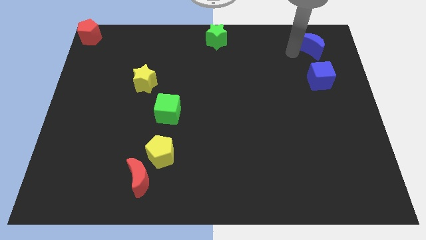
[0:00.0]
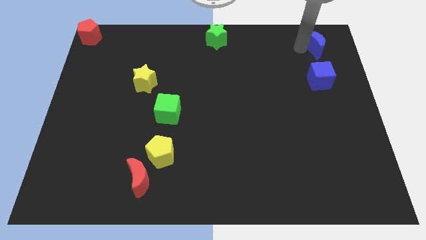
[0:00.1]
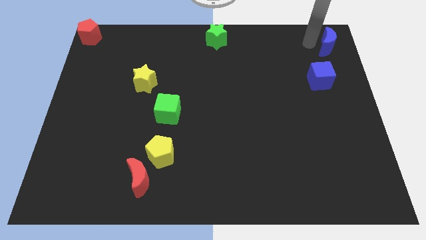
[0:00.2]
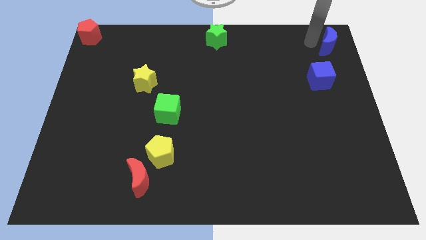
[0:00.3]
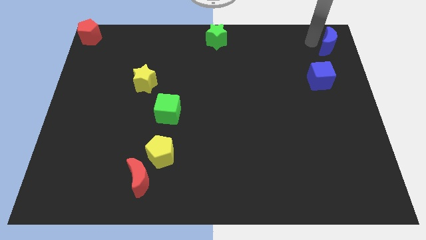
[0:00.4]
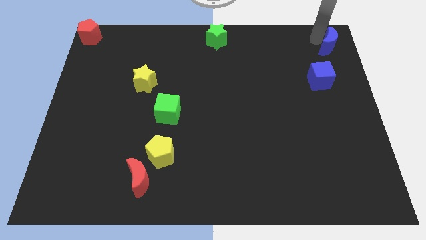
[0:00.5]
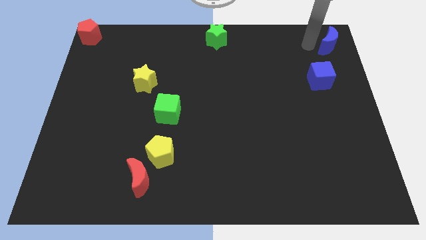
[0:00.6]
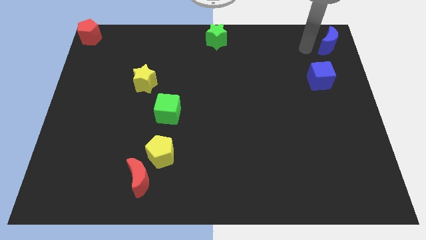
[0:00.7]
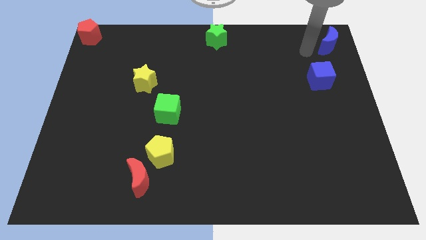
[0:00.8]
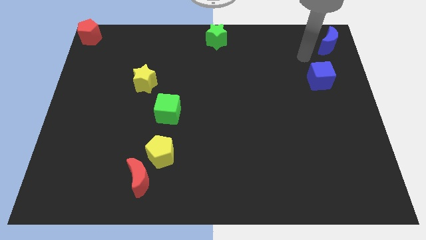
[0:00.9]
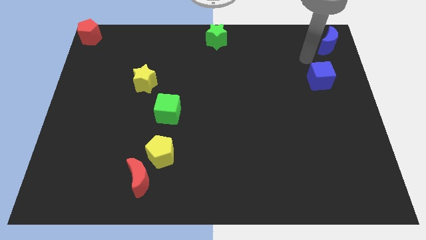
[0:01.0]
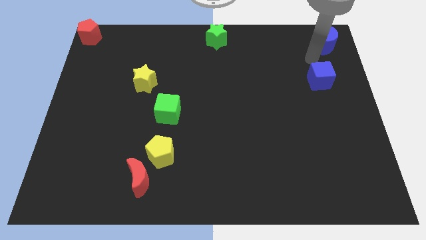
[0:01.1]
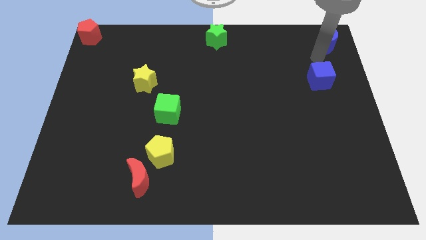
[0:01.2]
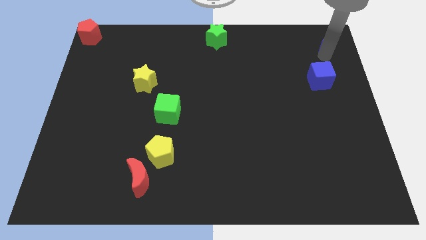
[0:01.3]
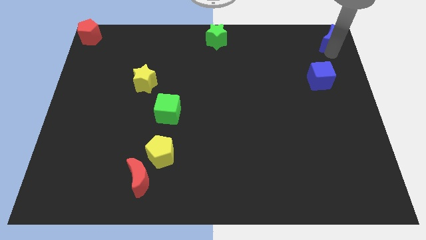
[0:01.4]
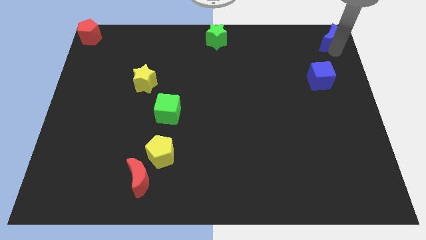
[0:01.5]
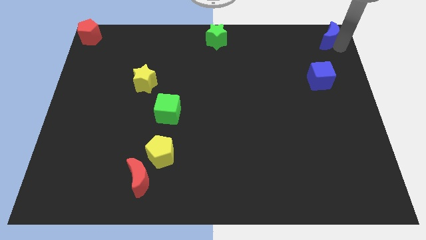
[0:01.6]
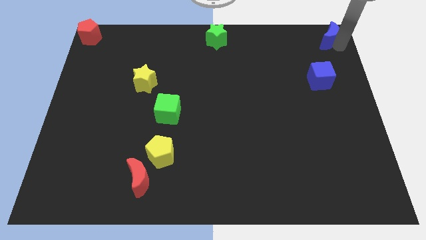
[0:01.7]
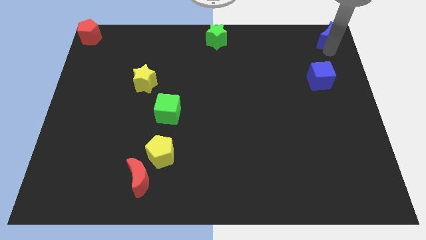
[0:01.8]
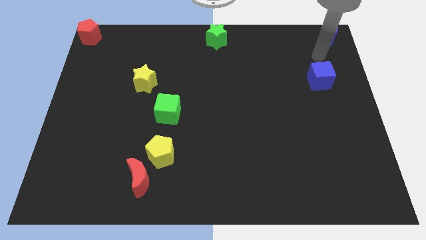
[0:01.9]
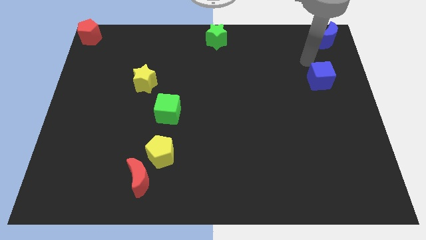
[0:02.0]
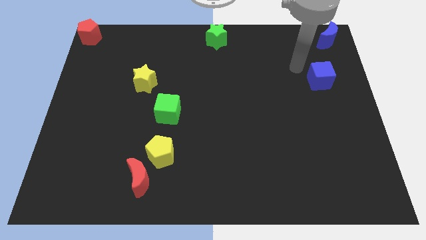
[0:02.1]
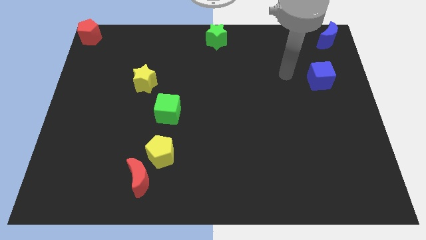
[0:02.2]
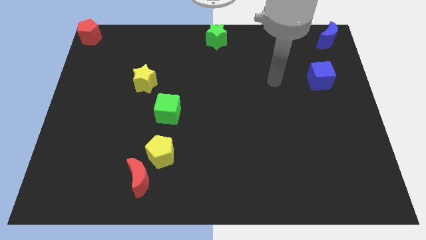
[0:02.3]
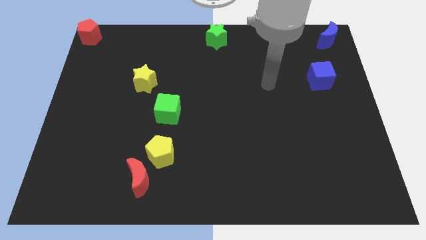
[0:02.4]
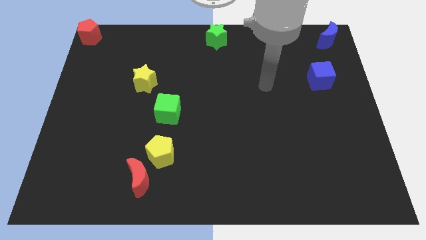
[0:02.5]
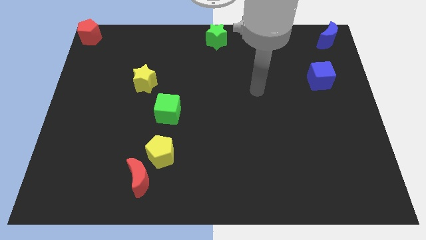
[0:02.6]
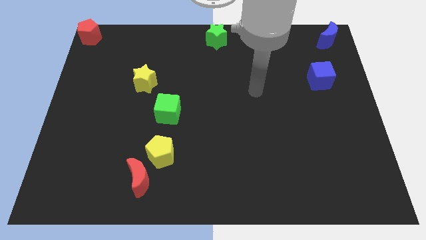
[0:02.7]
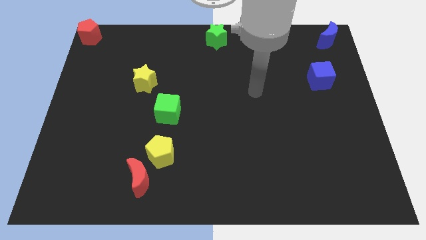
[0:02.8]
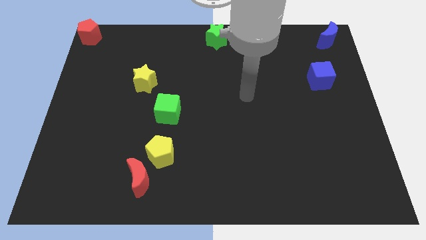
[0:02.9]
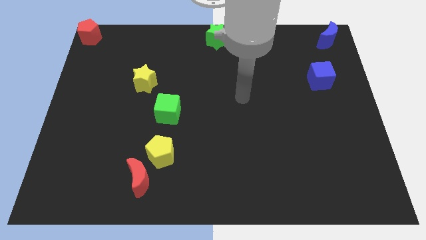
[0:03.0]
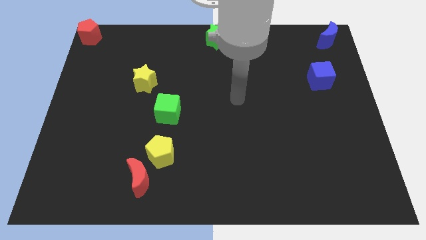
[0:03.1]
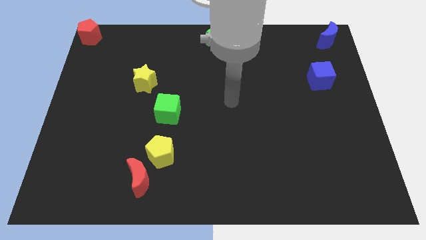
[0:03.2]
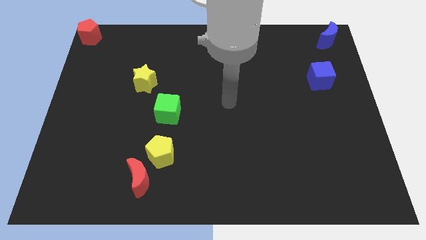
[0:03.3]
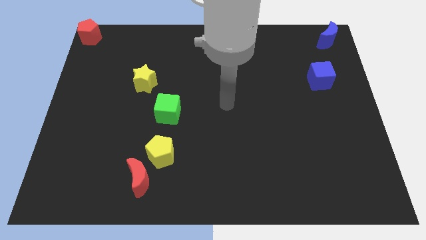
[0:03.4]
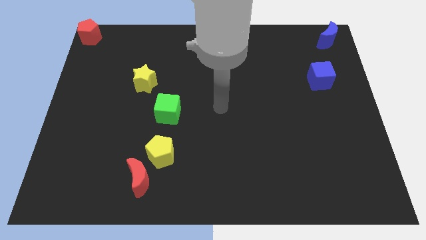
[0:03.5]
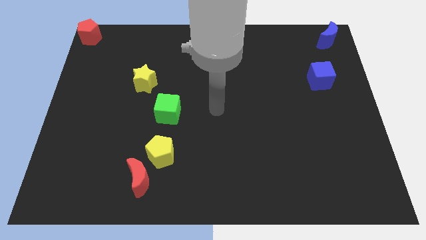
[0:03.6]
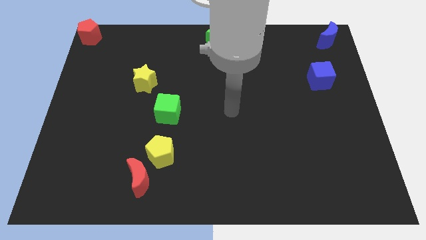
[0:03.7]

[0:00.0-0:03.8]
move the arm away from the blue moon

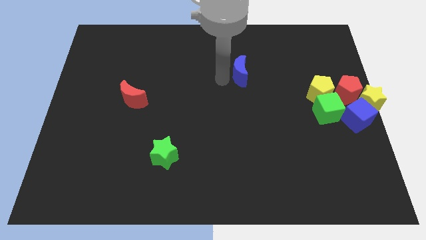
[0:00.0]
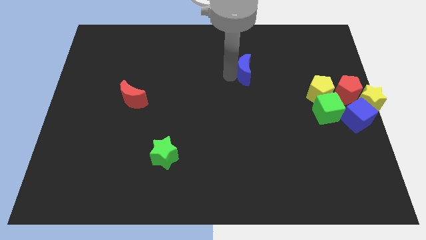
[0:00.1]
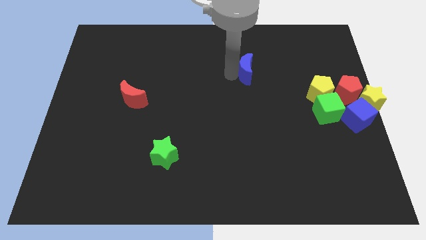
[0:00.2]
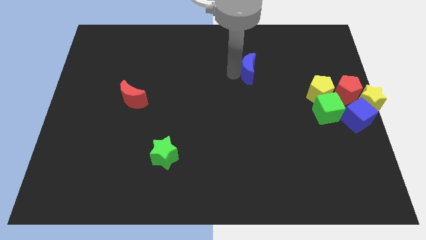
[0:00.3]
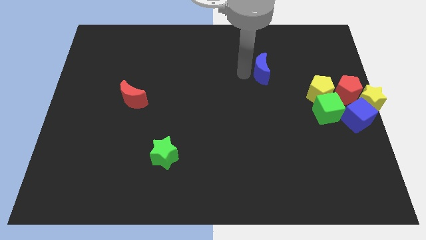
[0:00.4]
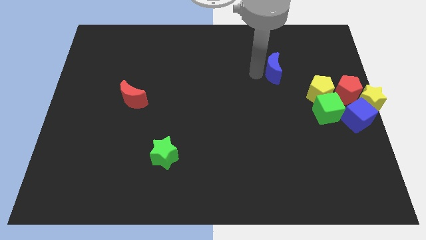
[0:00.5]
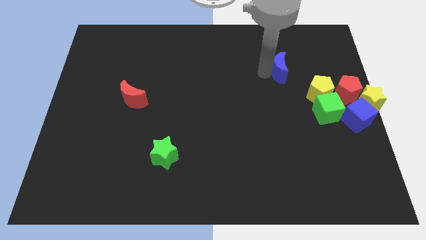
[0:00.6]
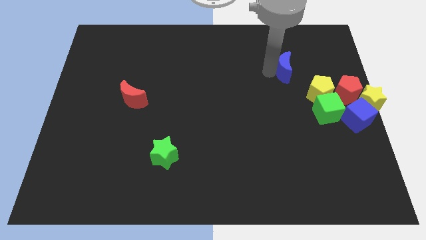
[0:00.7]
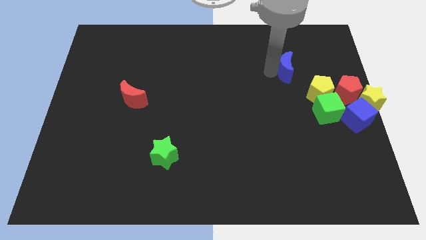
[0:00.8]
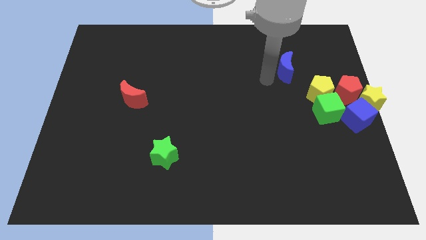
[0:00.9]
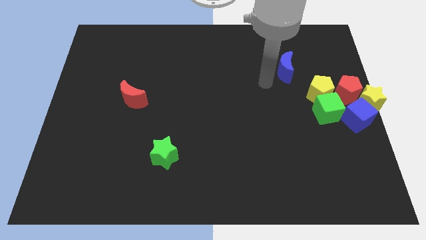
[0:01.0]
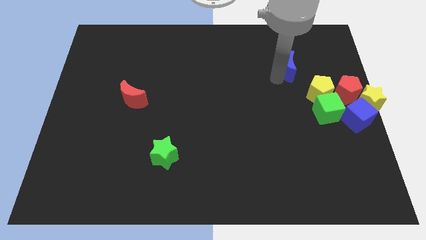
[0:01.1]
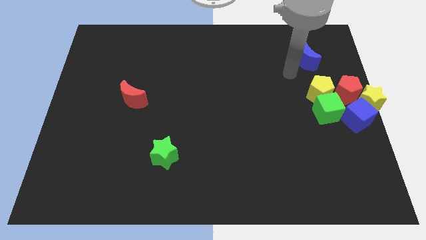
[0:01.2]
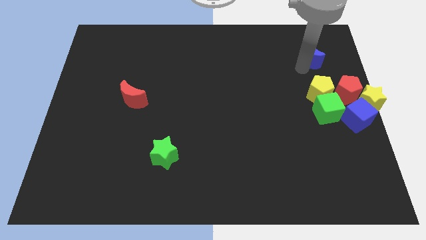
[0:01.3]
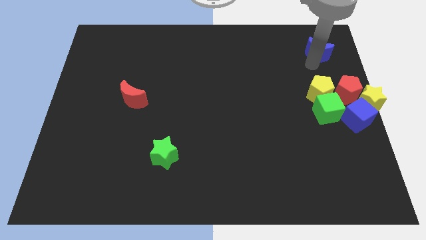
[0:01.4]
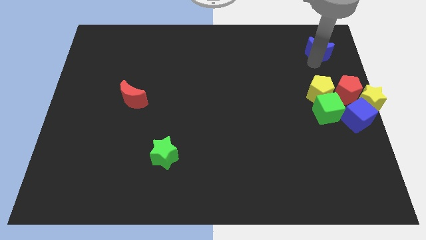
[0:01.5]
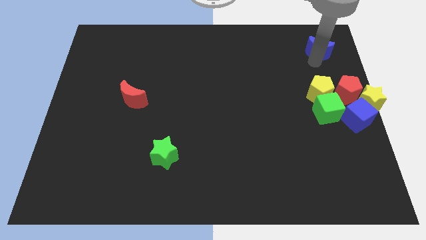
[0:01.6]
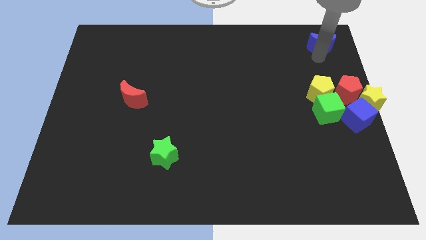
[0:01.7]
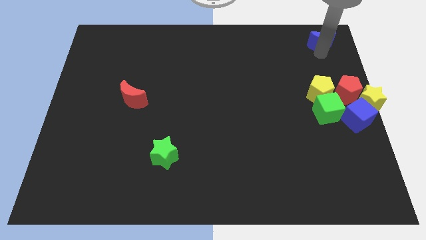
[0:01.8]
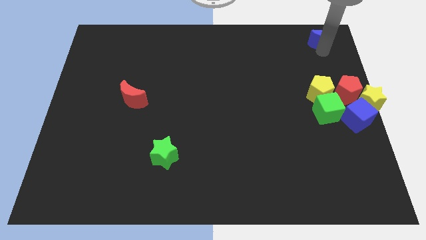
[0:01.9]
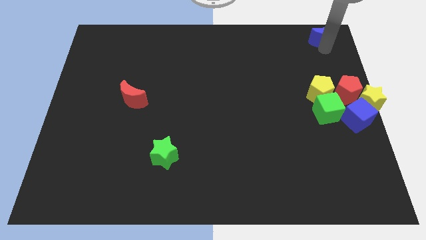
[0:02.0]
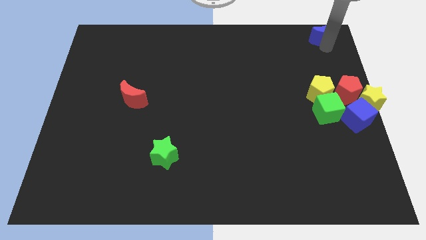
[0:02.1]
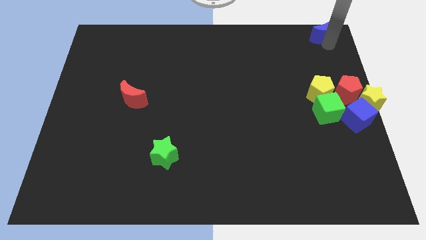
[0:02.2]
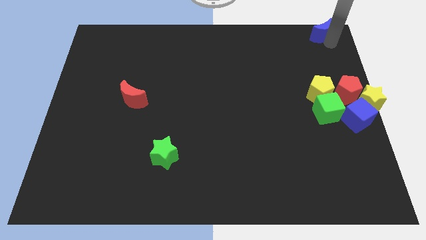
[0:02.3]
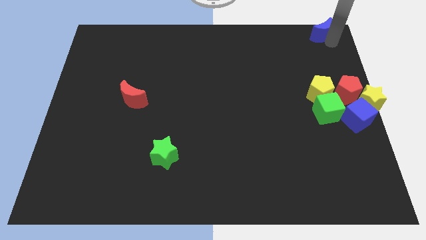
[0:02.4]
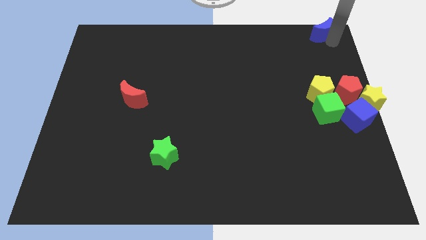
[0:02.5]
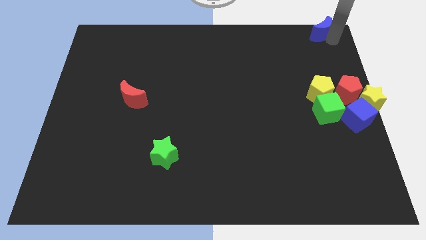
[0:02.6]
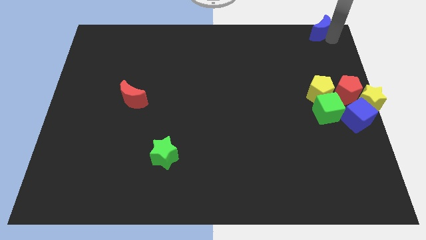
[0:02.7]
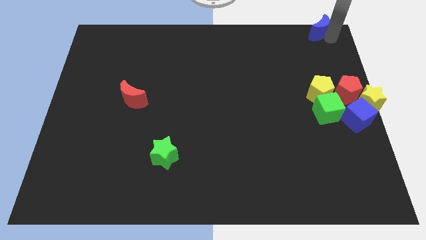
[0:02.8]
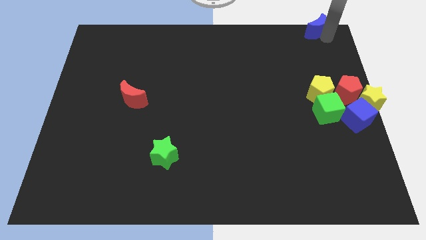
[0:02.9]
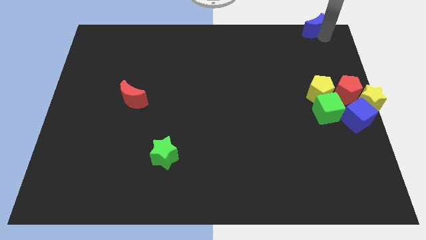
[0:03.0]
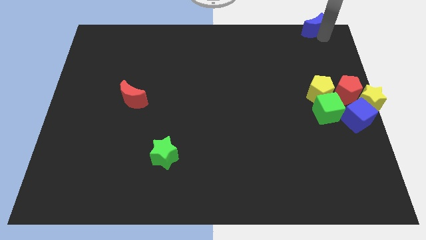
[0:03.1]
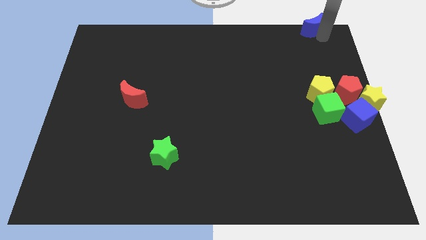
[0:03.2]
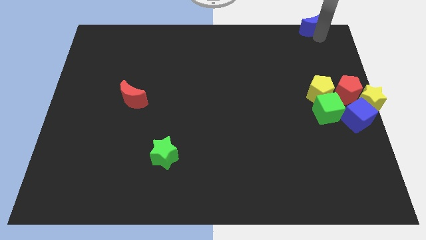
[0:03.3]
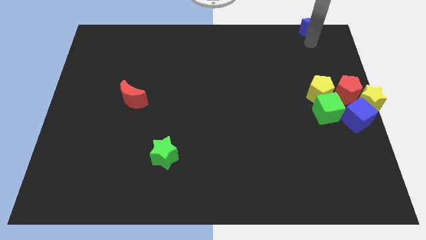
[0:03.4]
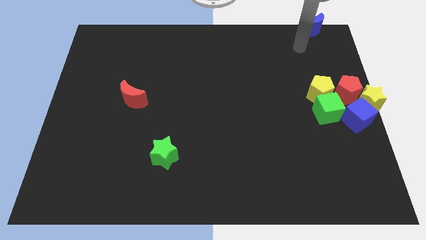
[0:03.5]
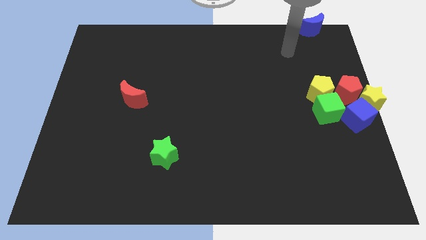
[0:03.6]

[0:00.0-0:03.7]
push the blue crescent towards the top right side of the board

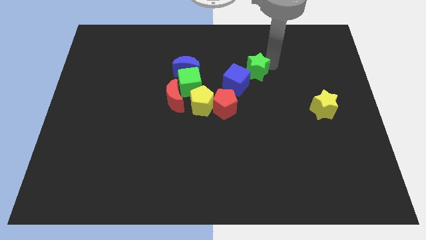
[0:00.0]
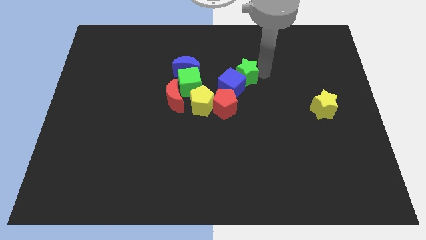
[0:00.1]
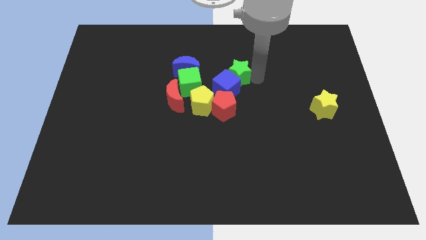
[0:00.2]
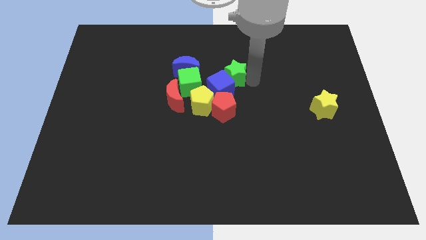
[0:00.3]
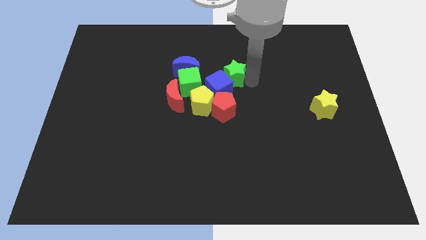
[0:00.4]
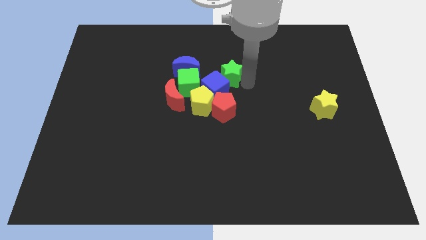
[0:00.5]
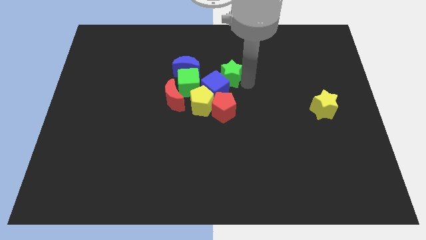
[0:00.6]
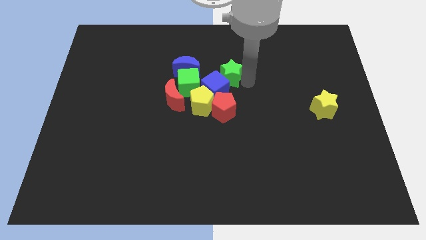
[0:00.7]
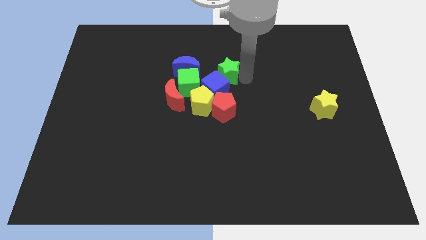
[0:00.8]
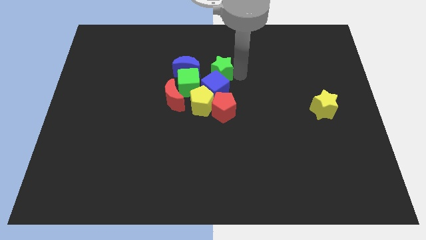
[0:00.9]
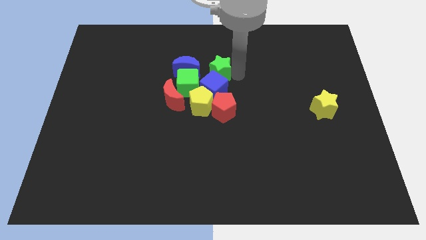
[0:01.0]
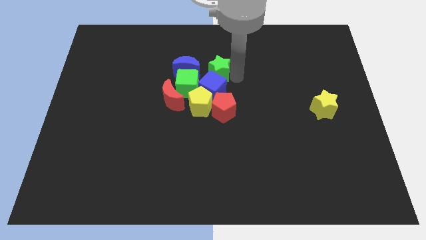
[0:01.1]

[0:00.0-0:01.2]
push the green star into the blue cube

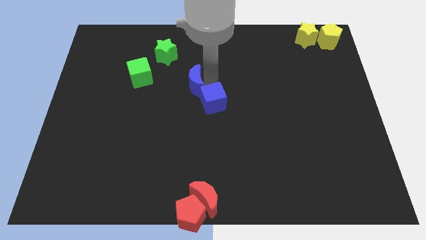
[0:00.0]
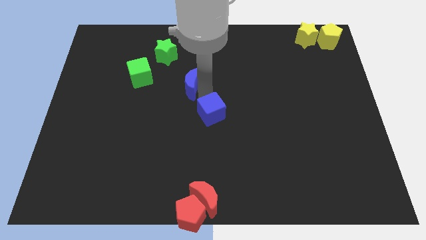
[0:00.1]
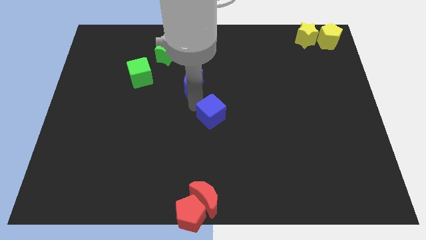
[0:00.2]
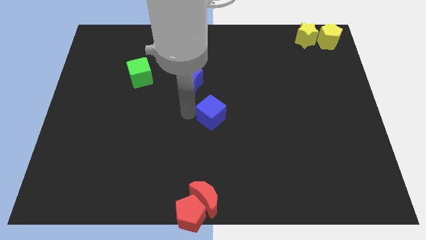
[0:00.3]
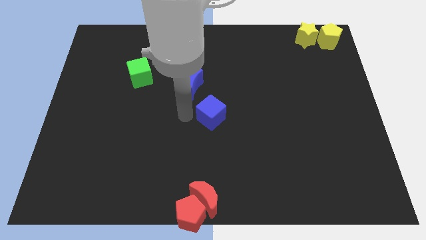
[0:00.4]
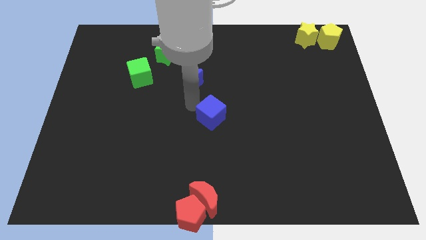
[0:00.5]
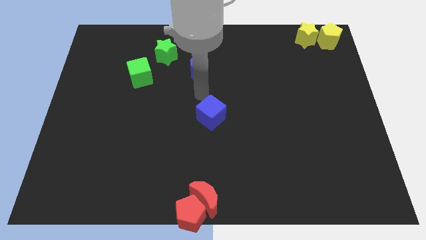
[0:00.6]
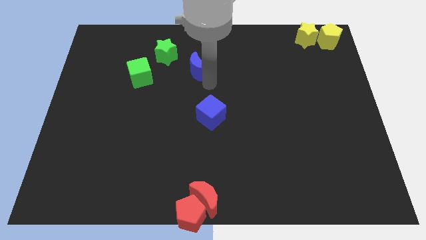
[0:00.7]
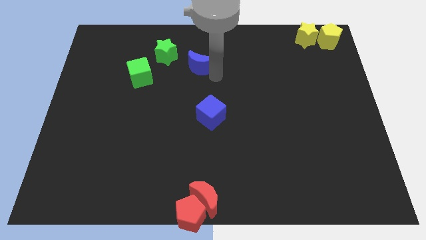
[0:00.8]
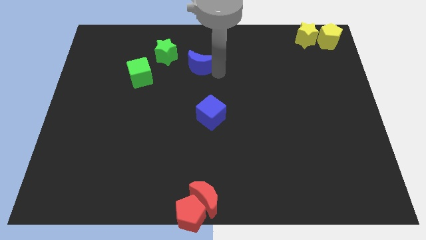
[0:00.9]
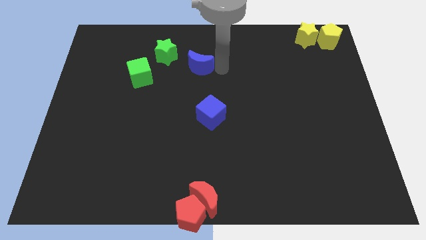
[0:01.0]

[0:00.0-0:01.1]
separate blue blocks from each other
